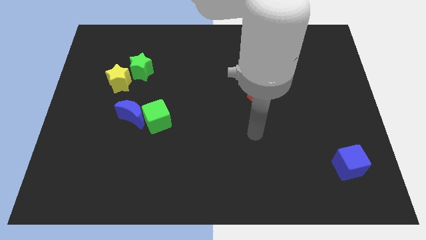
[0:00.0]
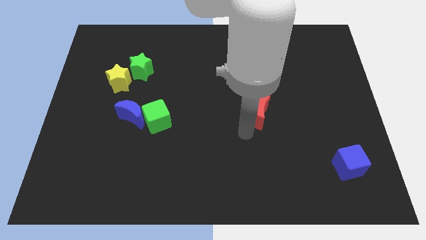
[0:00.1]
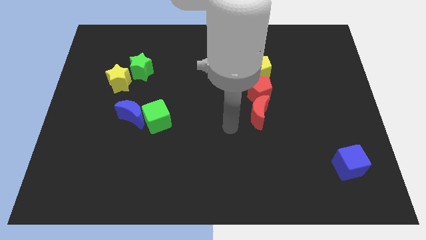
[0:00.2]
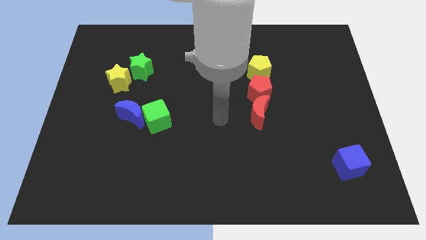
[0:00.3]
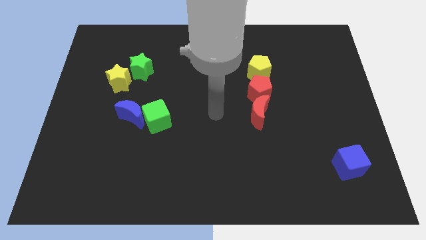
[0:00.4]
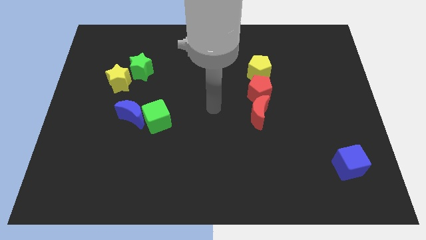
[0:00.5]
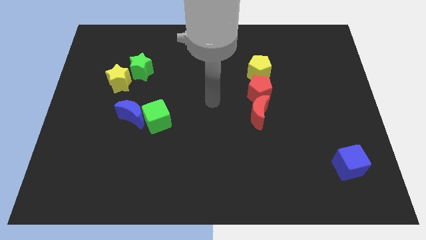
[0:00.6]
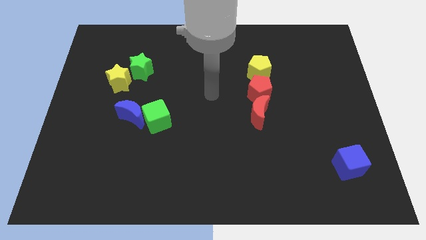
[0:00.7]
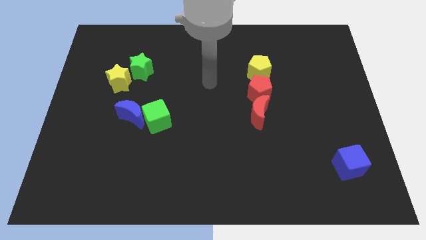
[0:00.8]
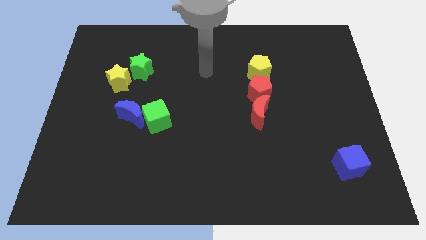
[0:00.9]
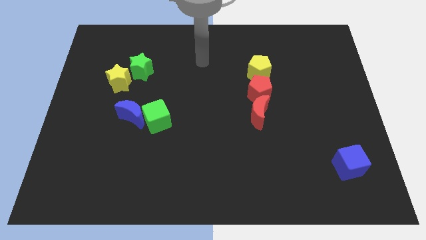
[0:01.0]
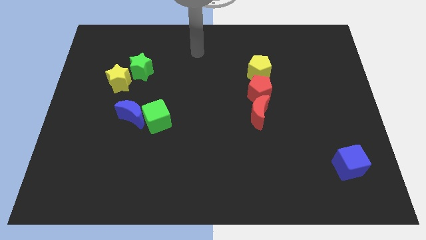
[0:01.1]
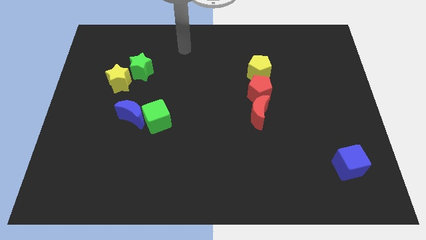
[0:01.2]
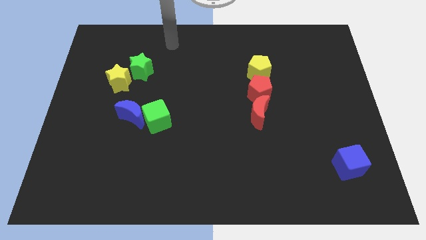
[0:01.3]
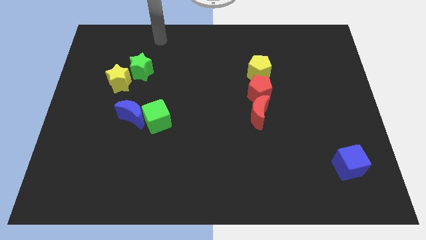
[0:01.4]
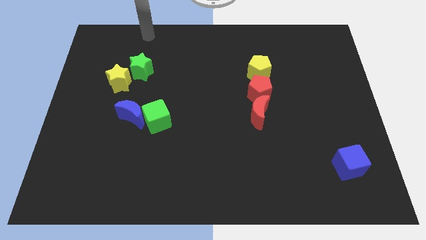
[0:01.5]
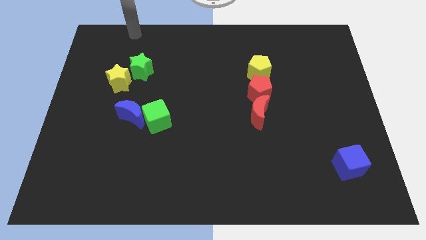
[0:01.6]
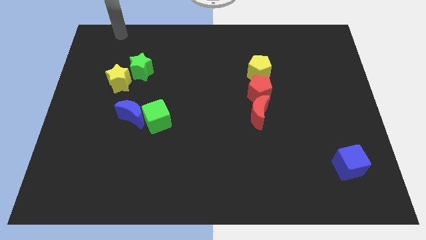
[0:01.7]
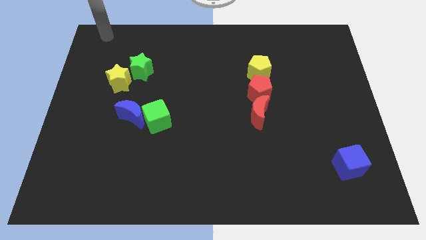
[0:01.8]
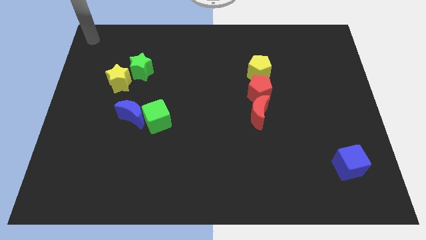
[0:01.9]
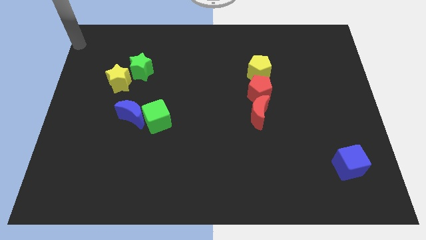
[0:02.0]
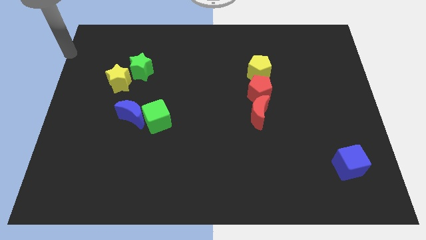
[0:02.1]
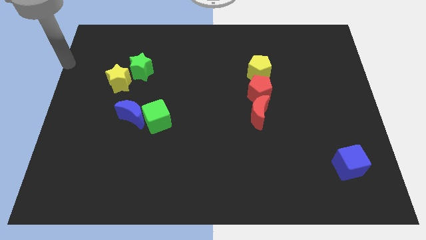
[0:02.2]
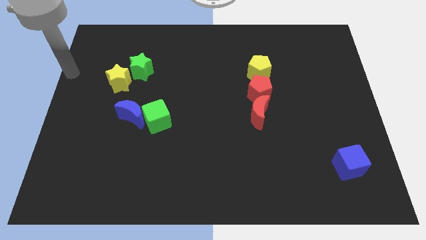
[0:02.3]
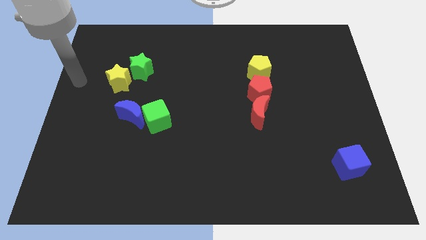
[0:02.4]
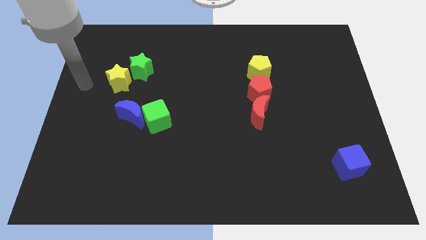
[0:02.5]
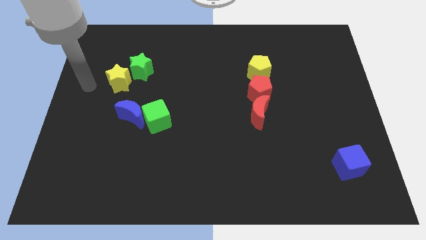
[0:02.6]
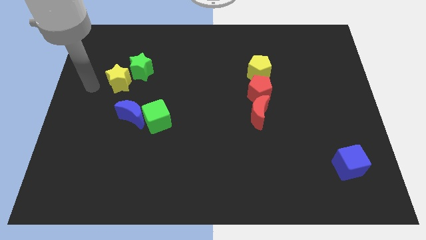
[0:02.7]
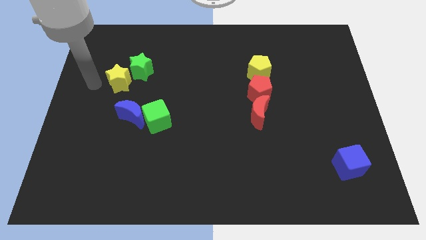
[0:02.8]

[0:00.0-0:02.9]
place your arm to the left side of yellow star

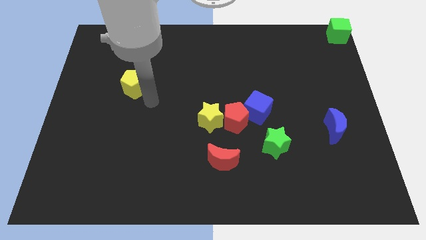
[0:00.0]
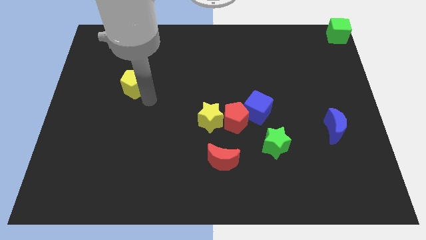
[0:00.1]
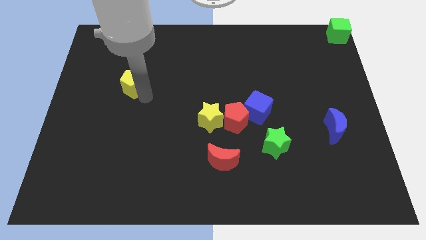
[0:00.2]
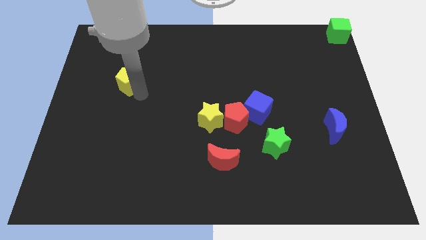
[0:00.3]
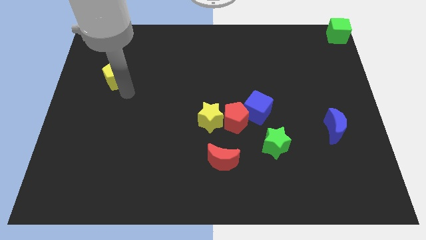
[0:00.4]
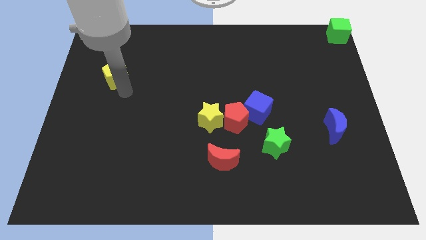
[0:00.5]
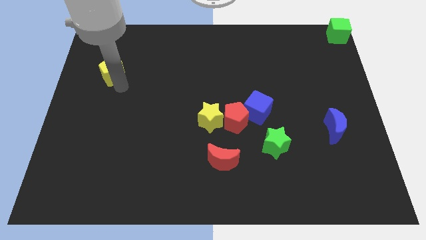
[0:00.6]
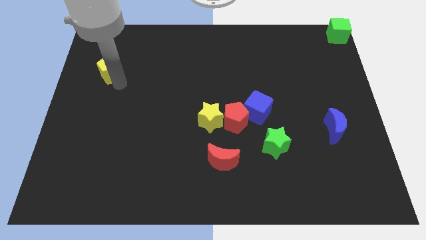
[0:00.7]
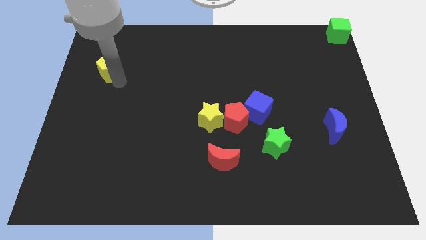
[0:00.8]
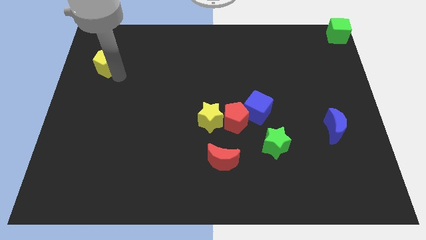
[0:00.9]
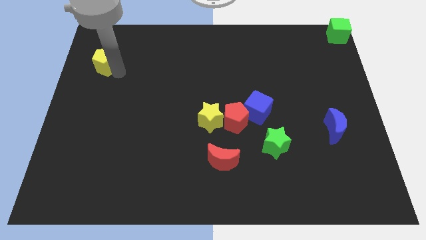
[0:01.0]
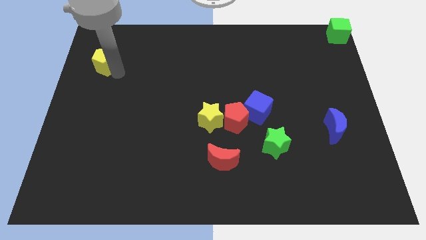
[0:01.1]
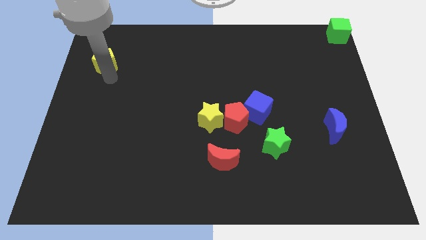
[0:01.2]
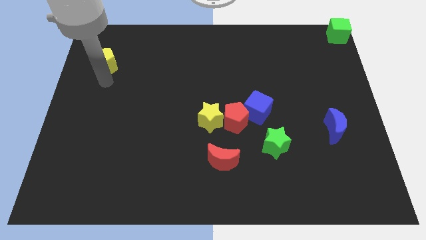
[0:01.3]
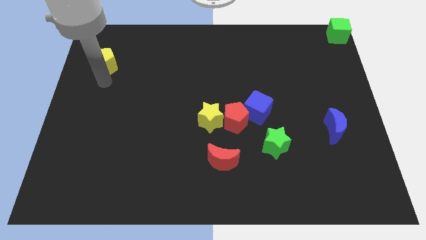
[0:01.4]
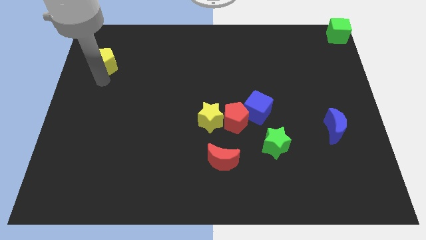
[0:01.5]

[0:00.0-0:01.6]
move yellow pentagon towards the top left side of the board

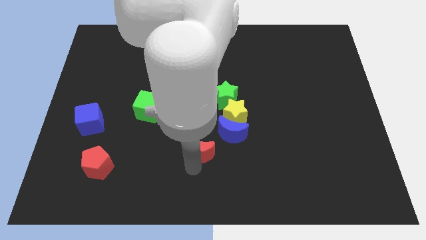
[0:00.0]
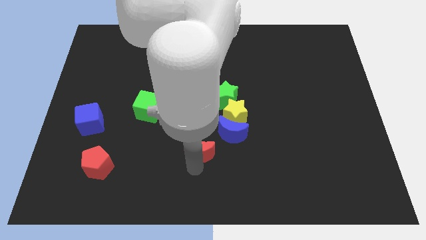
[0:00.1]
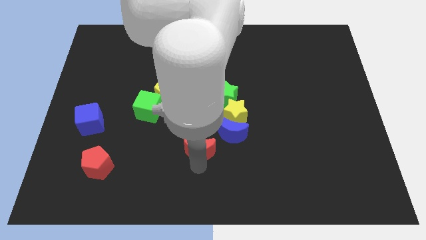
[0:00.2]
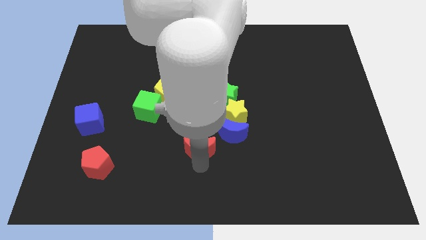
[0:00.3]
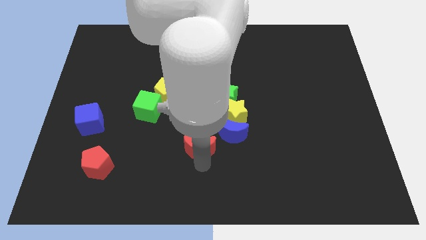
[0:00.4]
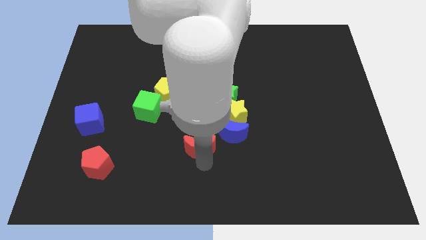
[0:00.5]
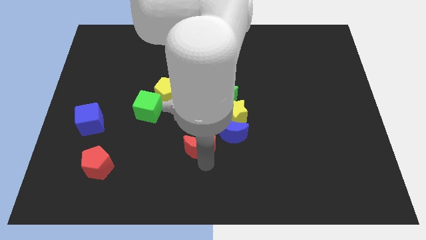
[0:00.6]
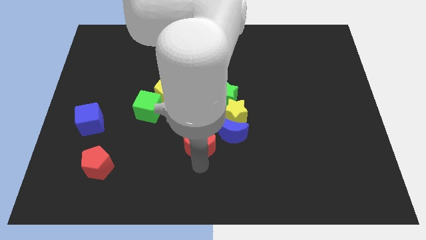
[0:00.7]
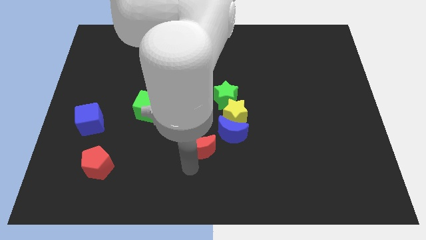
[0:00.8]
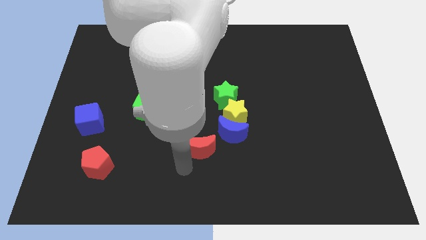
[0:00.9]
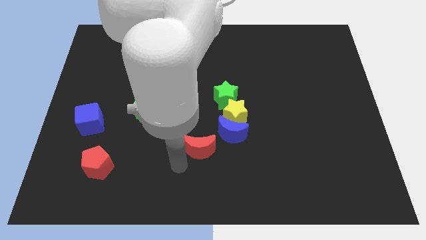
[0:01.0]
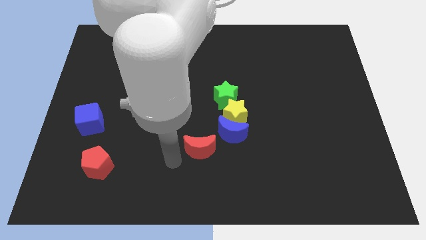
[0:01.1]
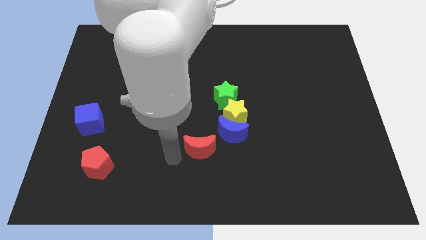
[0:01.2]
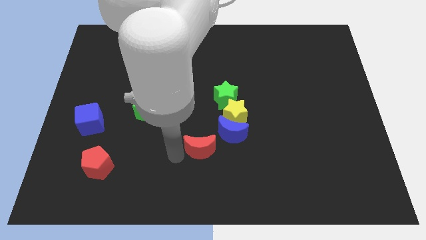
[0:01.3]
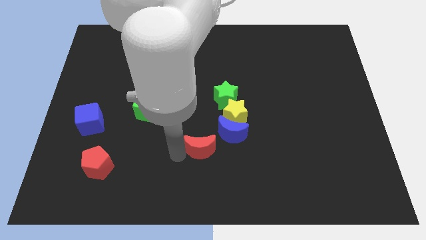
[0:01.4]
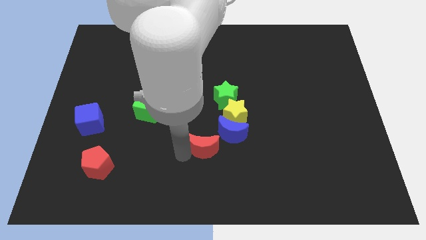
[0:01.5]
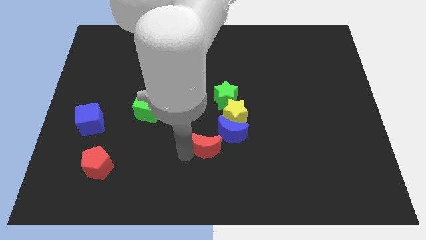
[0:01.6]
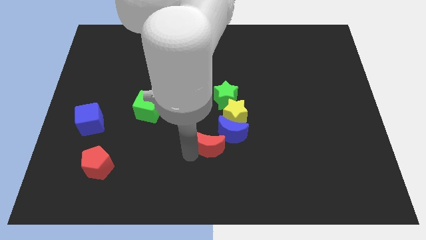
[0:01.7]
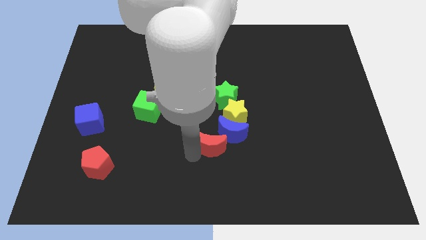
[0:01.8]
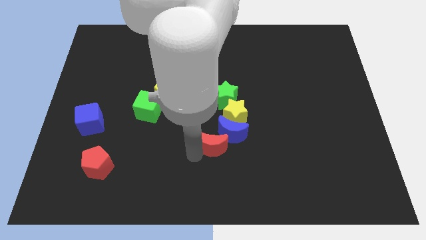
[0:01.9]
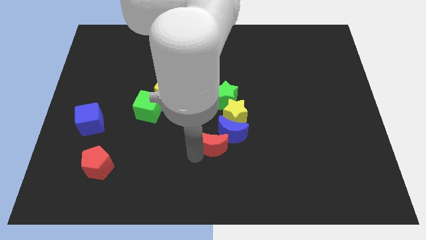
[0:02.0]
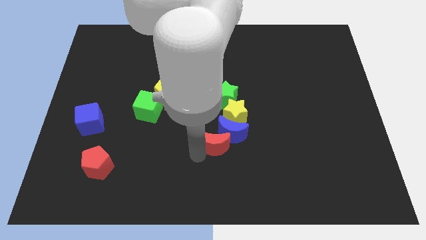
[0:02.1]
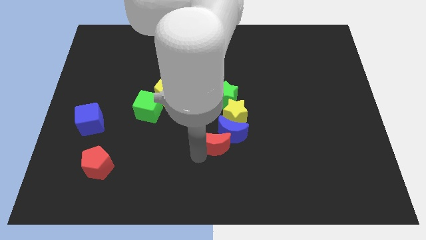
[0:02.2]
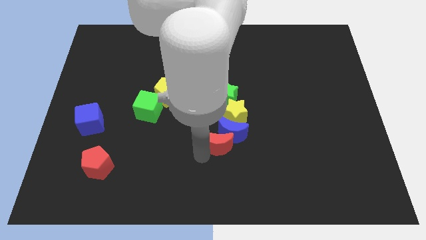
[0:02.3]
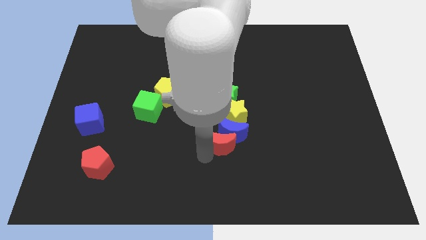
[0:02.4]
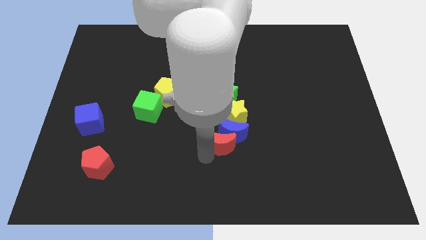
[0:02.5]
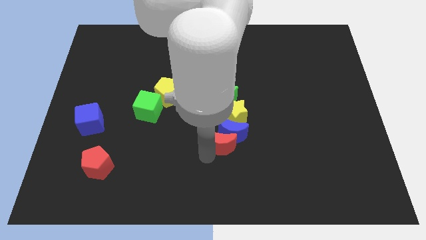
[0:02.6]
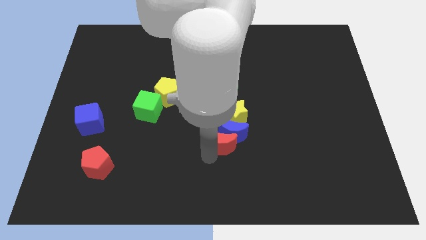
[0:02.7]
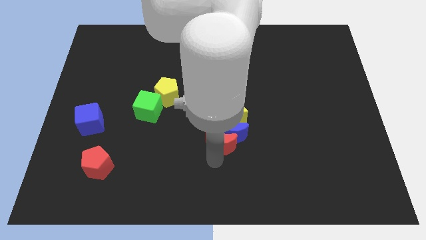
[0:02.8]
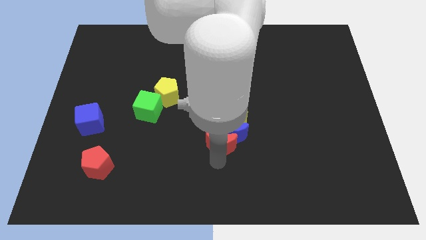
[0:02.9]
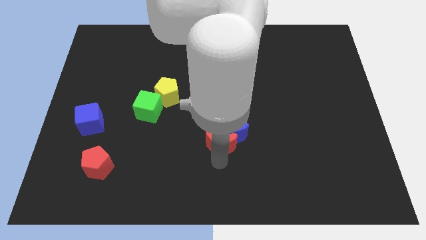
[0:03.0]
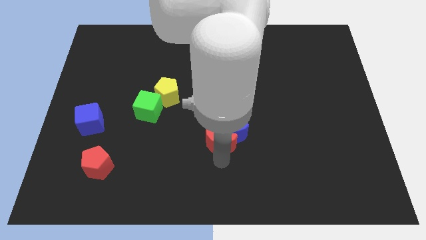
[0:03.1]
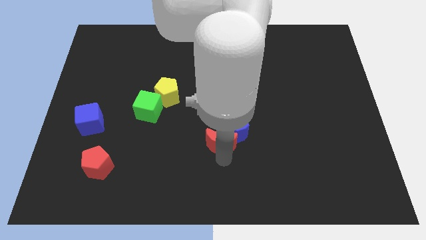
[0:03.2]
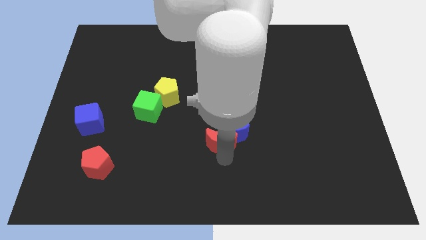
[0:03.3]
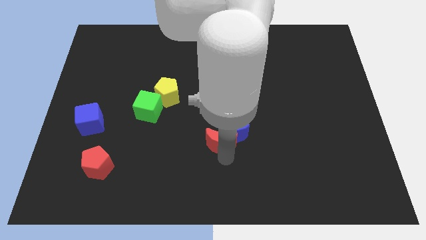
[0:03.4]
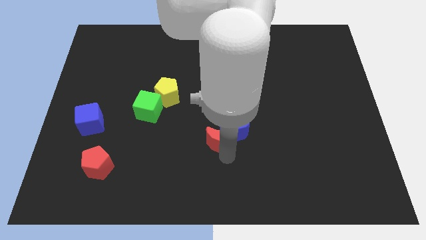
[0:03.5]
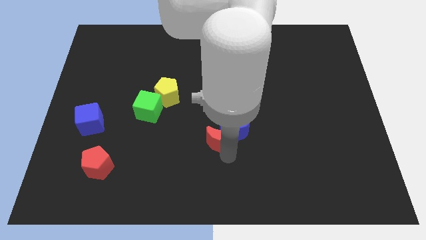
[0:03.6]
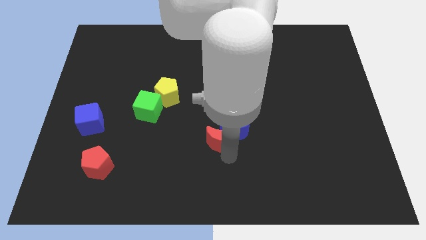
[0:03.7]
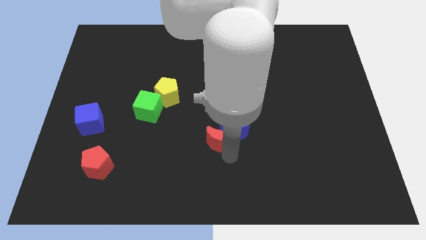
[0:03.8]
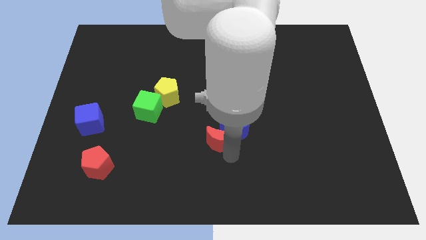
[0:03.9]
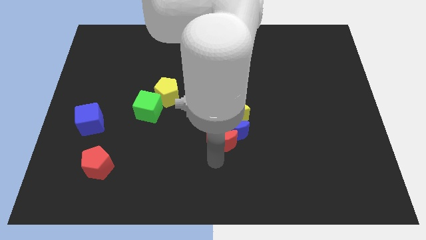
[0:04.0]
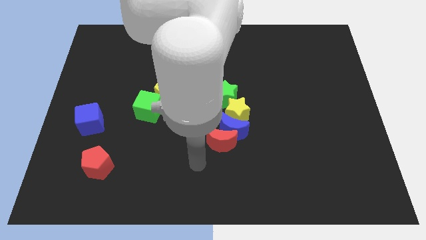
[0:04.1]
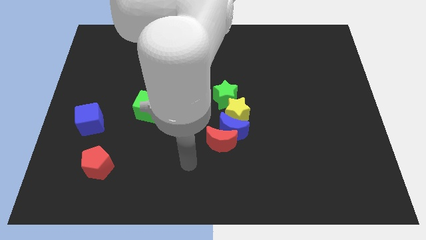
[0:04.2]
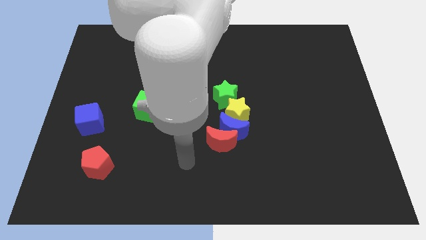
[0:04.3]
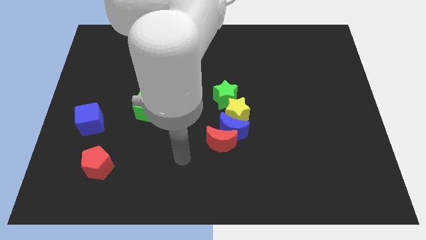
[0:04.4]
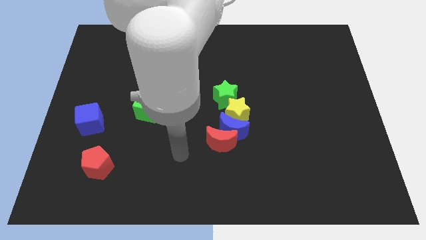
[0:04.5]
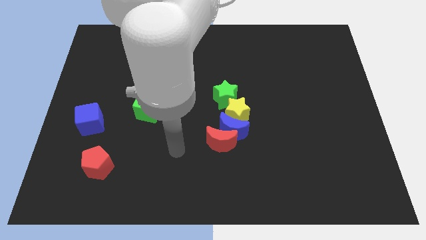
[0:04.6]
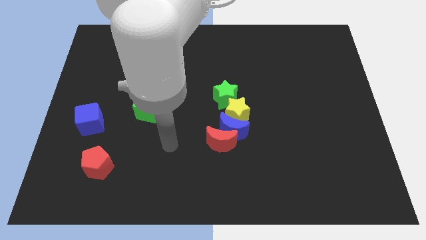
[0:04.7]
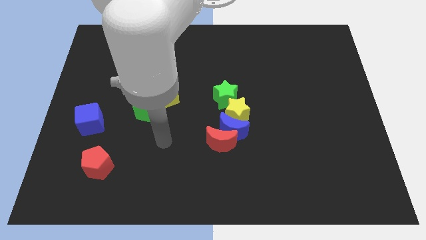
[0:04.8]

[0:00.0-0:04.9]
place the red moon below the blue moon
